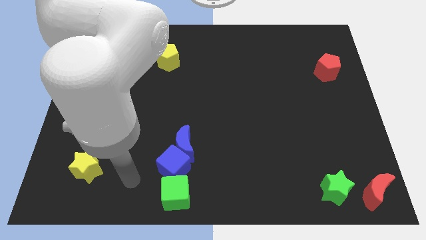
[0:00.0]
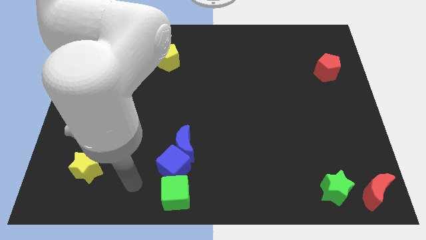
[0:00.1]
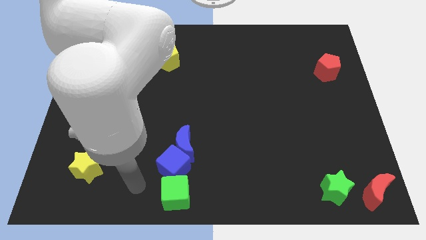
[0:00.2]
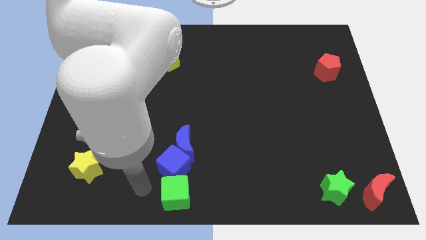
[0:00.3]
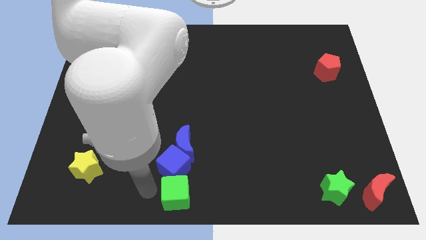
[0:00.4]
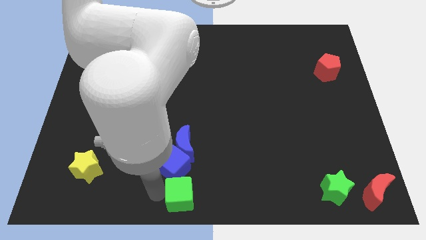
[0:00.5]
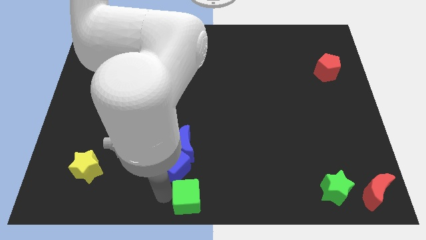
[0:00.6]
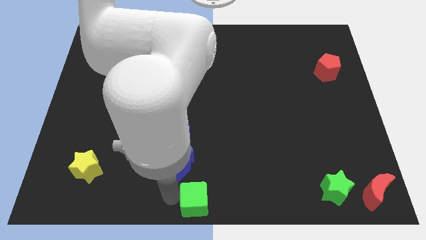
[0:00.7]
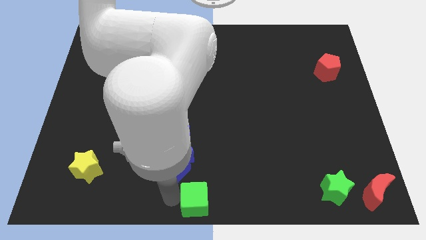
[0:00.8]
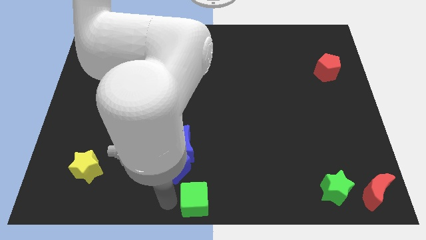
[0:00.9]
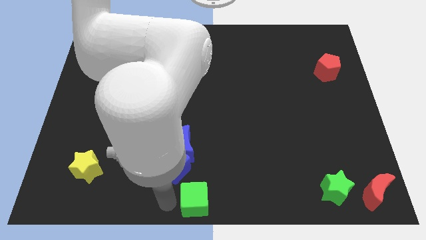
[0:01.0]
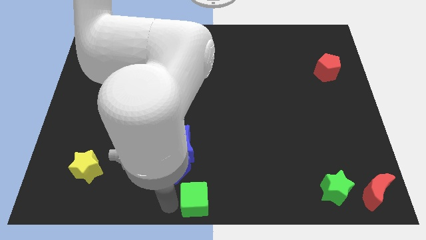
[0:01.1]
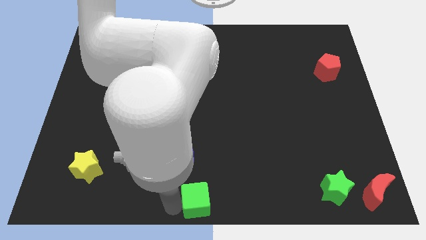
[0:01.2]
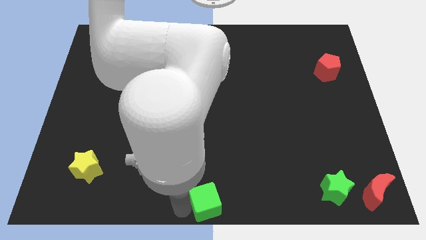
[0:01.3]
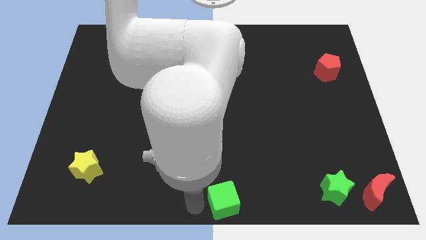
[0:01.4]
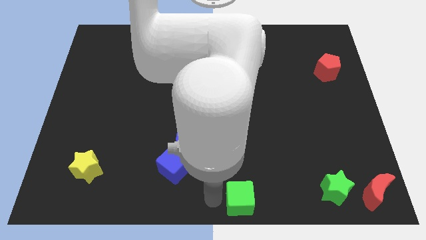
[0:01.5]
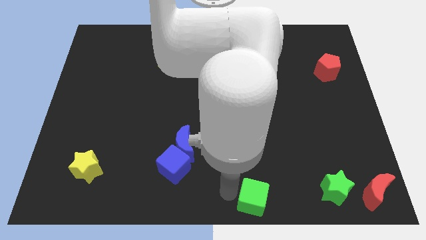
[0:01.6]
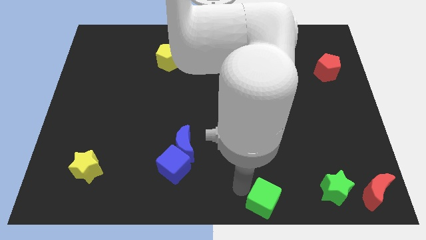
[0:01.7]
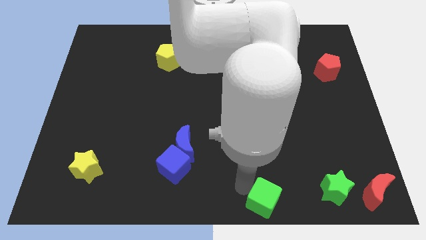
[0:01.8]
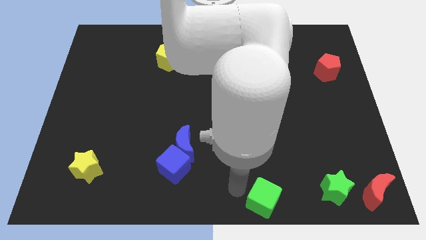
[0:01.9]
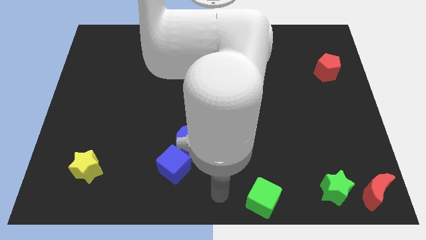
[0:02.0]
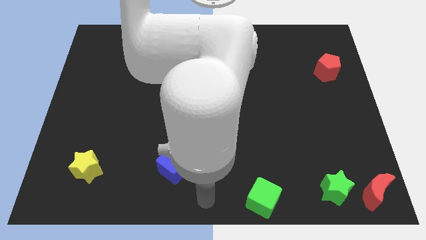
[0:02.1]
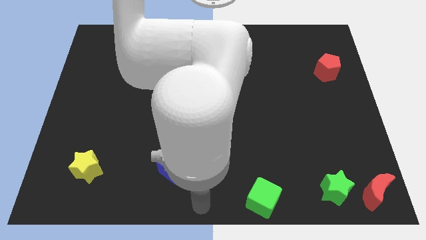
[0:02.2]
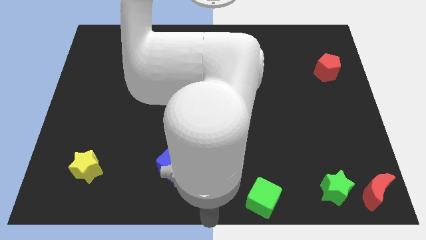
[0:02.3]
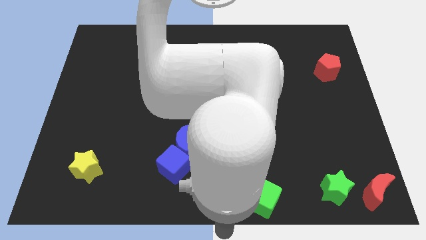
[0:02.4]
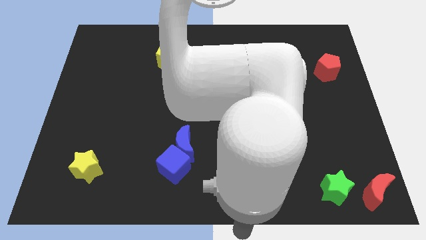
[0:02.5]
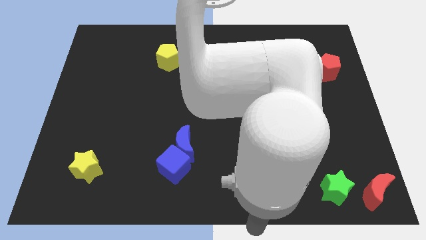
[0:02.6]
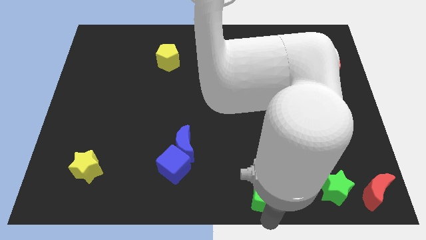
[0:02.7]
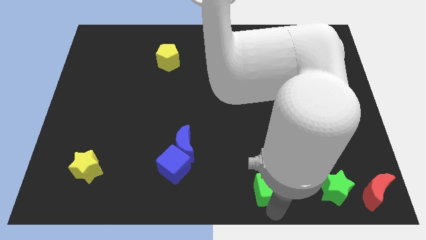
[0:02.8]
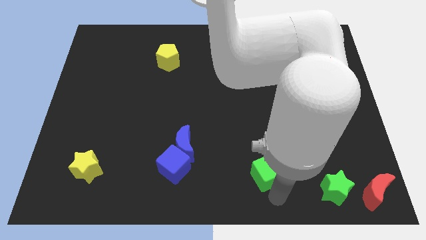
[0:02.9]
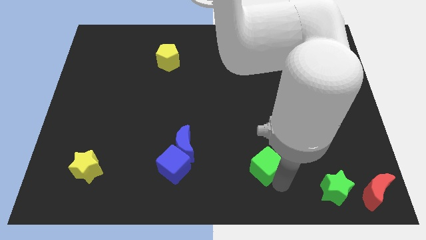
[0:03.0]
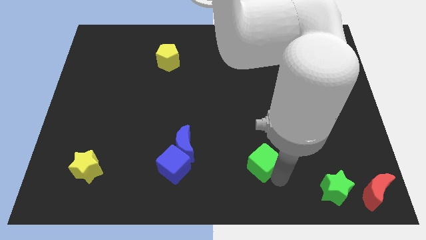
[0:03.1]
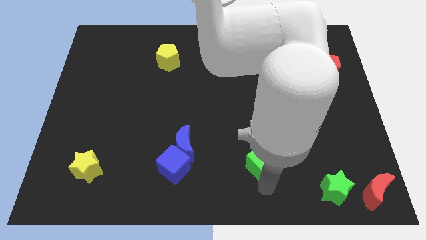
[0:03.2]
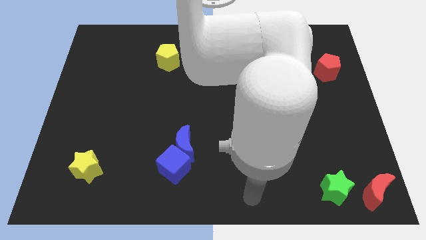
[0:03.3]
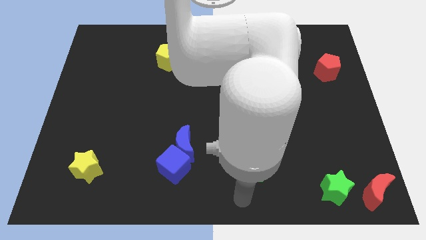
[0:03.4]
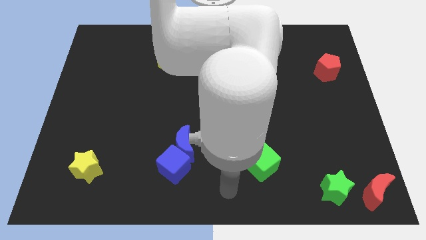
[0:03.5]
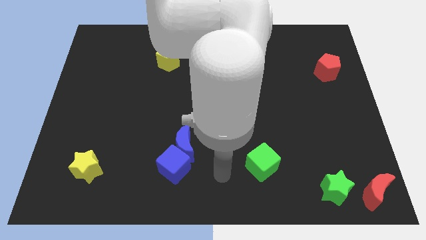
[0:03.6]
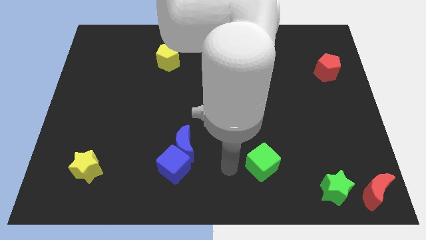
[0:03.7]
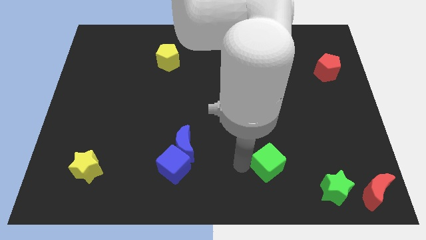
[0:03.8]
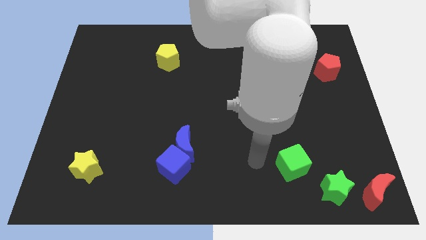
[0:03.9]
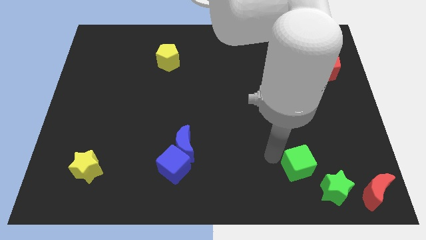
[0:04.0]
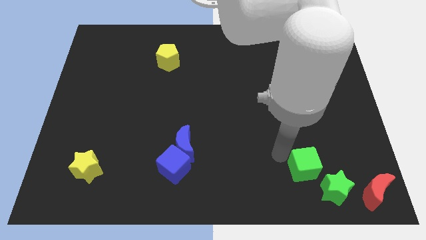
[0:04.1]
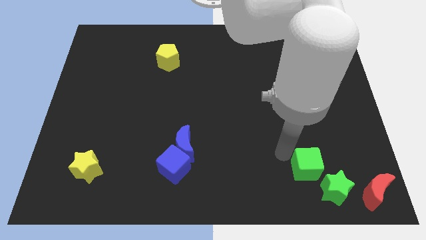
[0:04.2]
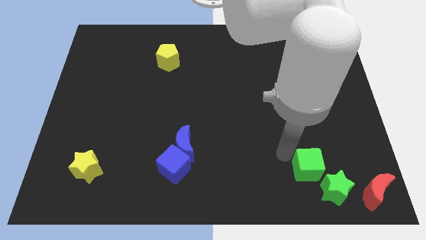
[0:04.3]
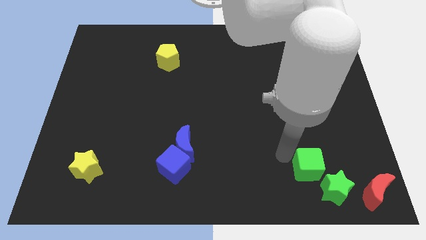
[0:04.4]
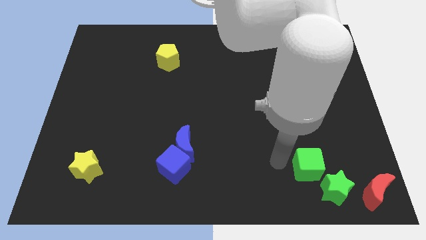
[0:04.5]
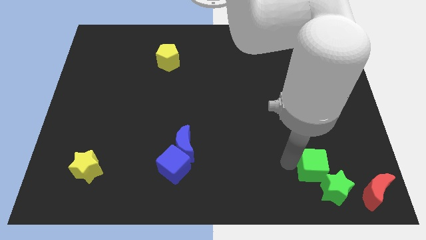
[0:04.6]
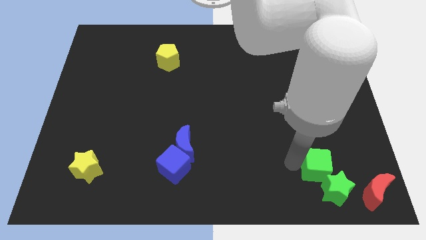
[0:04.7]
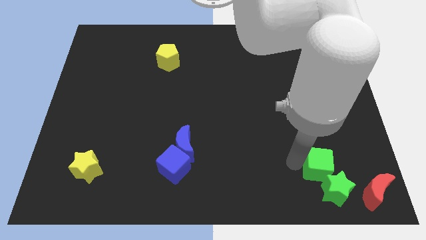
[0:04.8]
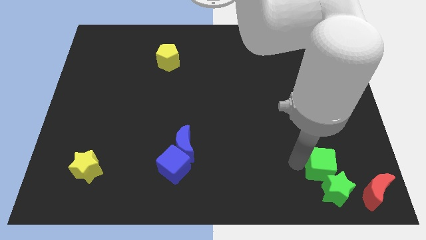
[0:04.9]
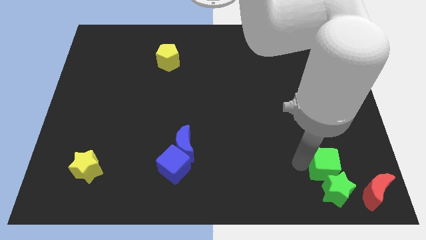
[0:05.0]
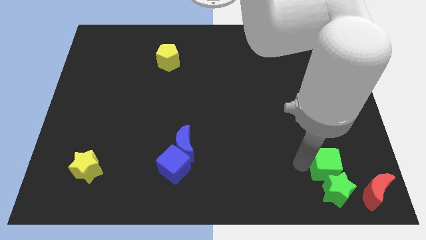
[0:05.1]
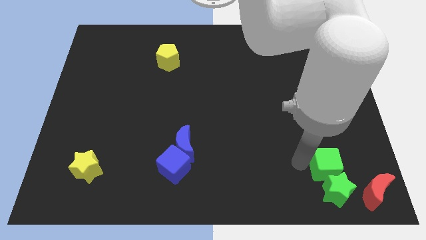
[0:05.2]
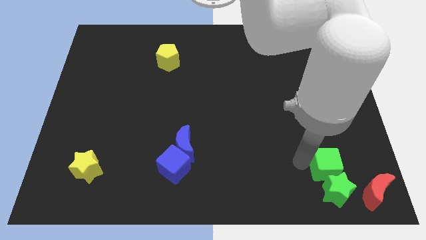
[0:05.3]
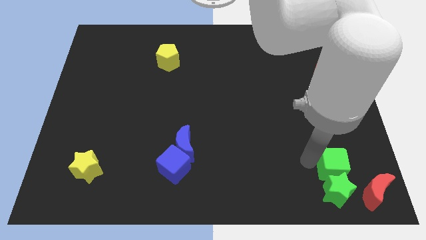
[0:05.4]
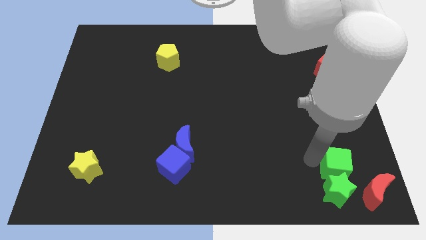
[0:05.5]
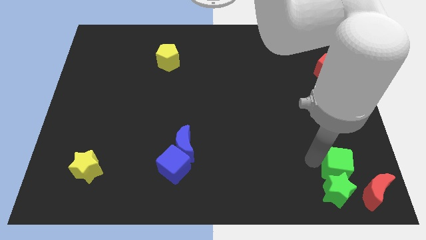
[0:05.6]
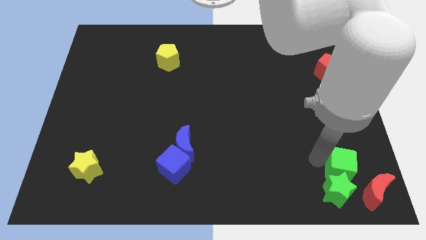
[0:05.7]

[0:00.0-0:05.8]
move the green cube to the top of the green star

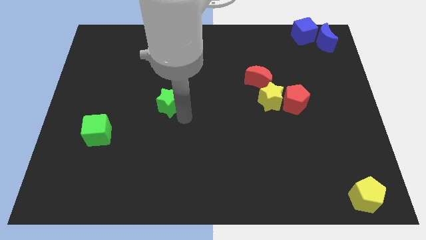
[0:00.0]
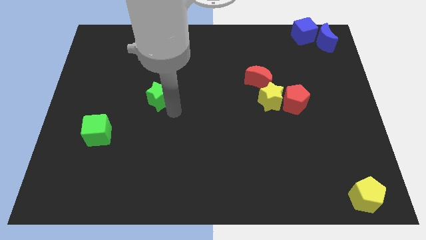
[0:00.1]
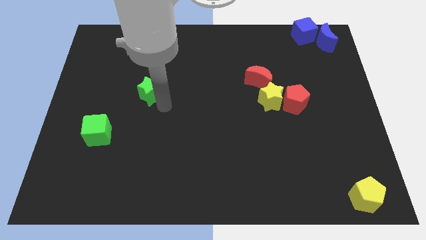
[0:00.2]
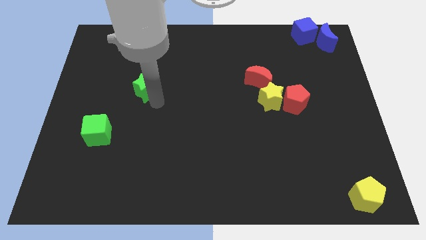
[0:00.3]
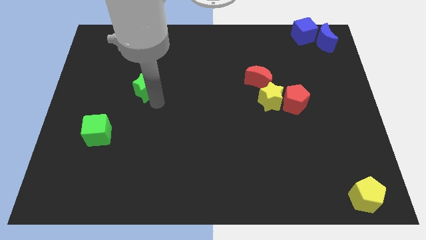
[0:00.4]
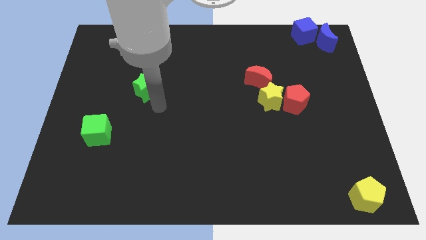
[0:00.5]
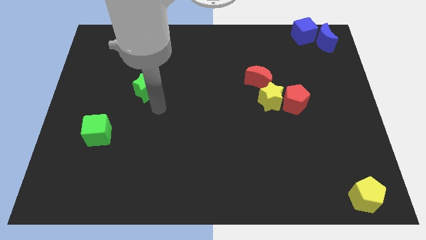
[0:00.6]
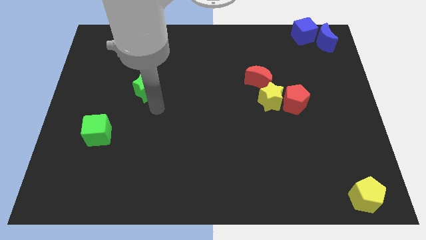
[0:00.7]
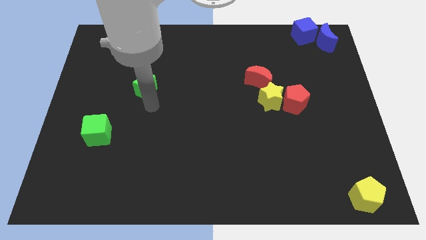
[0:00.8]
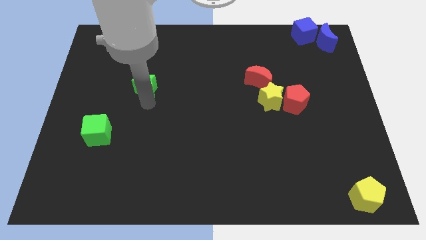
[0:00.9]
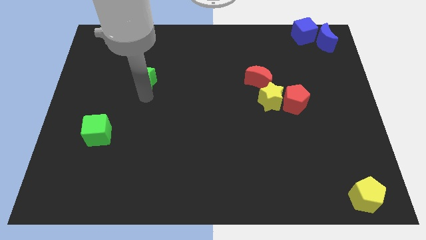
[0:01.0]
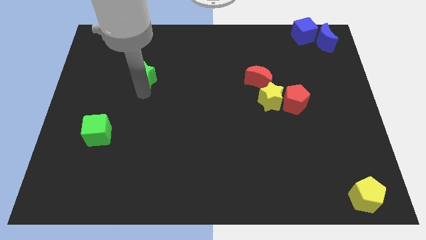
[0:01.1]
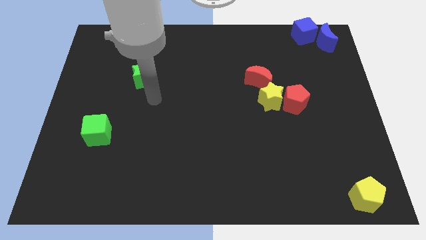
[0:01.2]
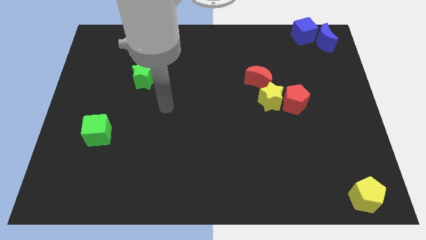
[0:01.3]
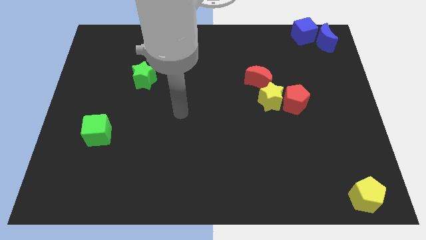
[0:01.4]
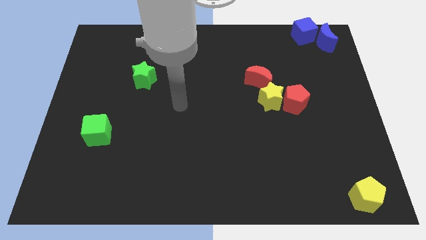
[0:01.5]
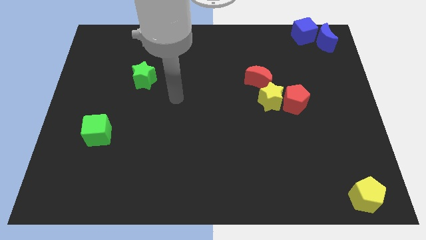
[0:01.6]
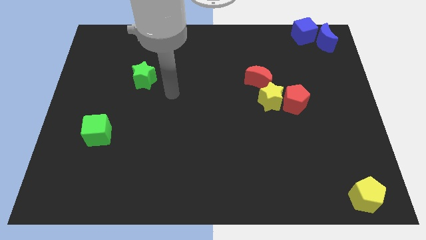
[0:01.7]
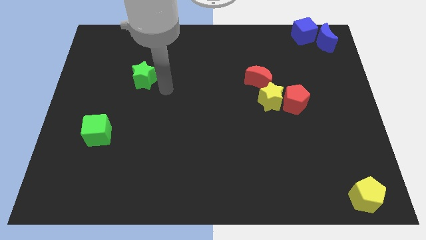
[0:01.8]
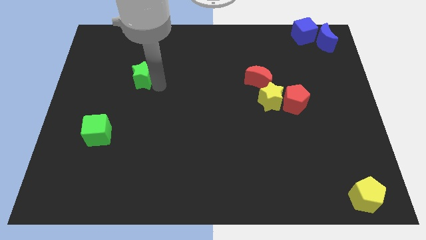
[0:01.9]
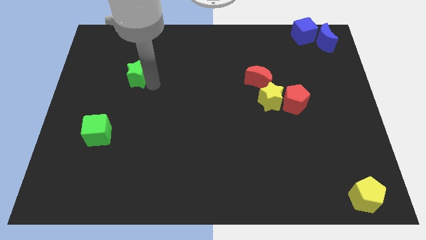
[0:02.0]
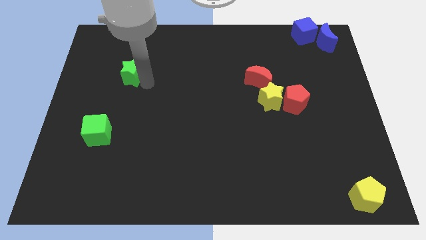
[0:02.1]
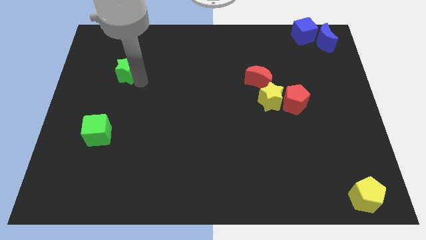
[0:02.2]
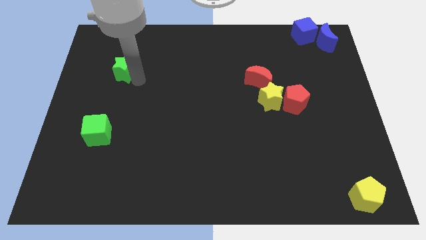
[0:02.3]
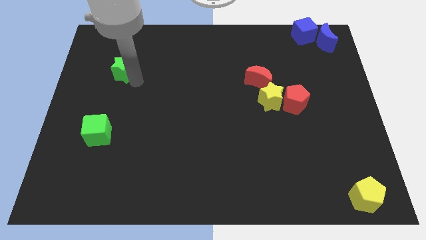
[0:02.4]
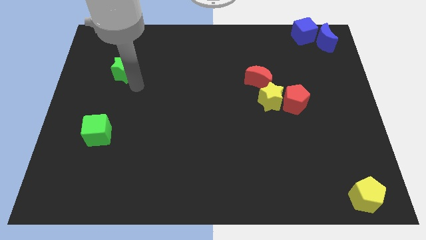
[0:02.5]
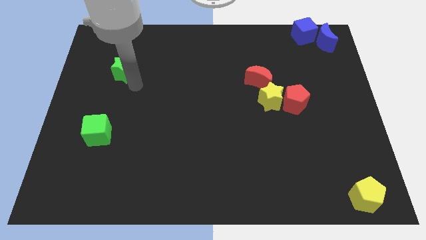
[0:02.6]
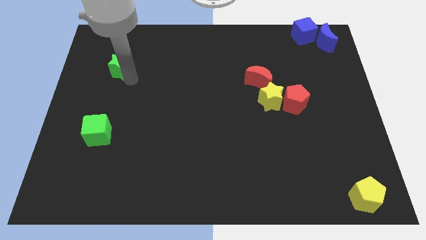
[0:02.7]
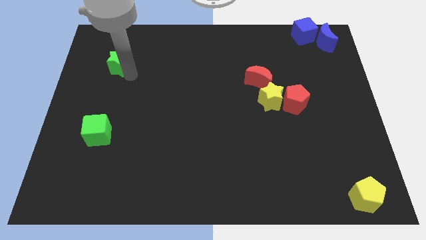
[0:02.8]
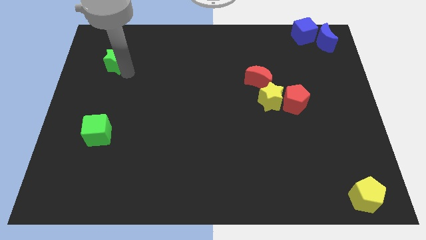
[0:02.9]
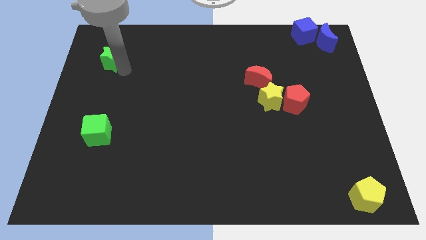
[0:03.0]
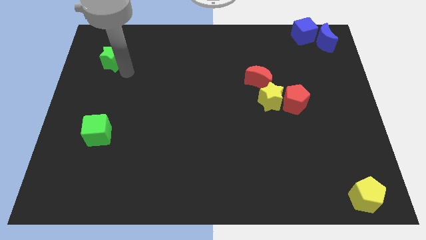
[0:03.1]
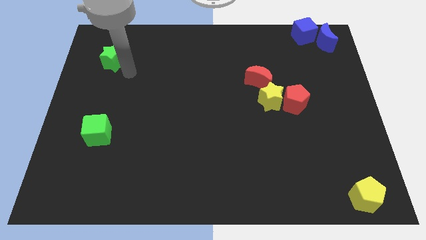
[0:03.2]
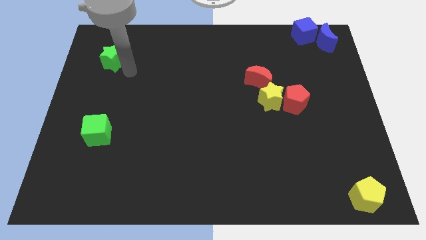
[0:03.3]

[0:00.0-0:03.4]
place the green star to the top left
